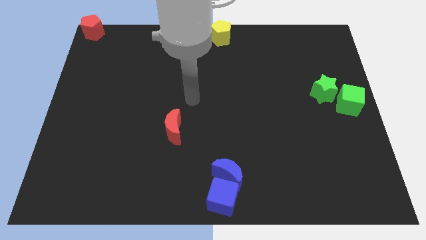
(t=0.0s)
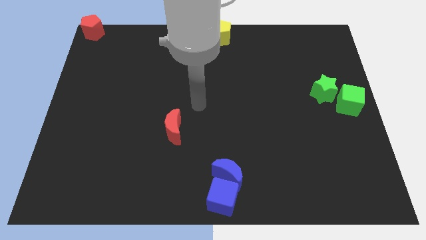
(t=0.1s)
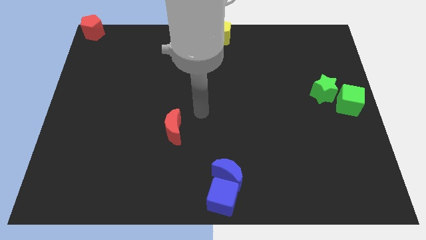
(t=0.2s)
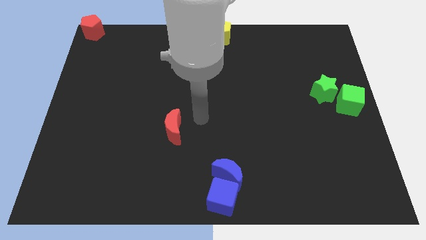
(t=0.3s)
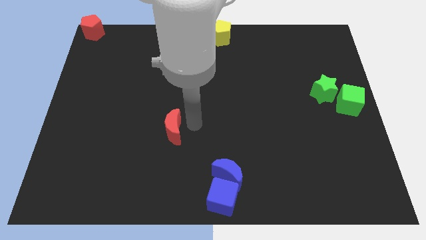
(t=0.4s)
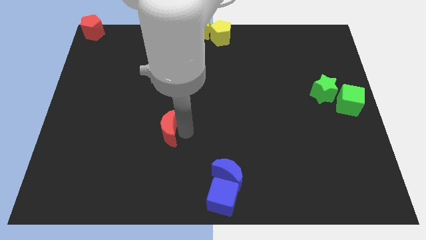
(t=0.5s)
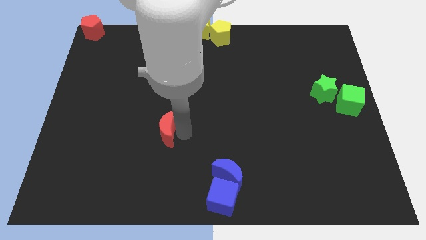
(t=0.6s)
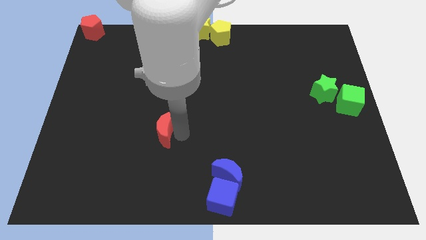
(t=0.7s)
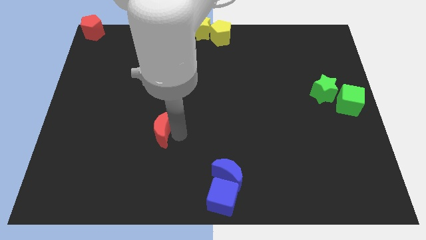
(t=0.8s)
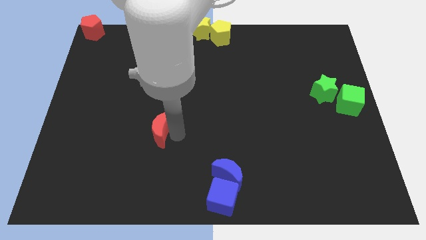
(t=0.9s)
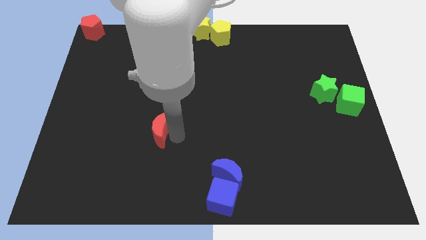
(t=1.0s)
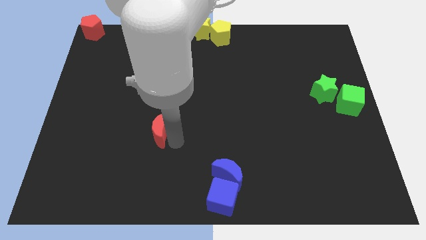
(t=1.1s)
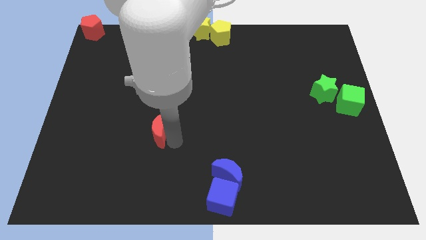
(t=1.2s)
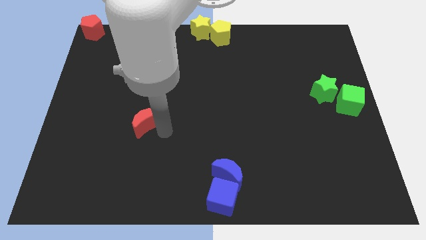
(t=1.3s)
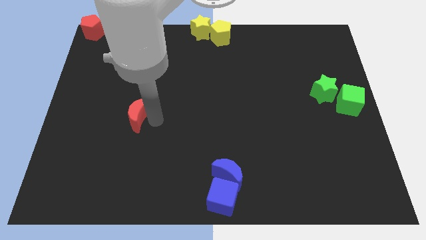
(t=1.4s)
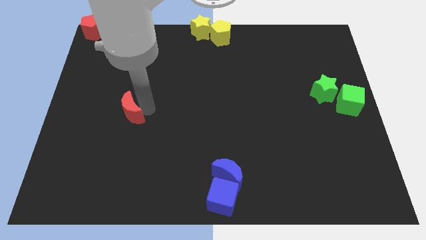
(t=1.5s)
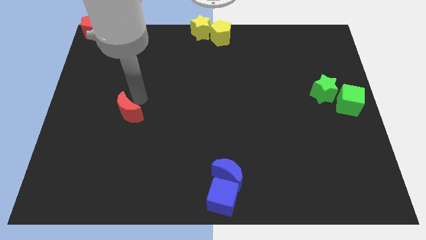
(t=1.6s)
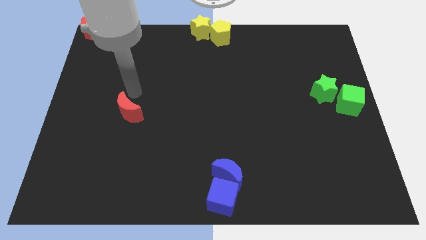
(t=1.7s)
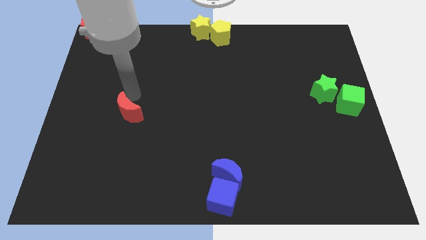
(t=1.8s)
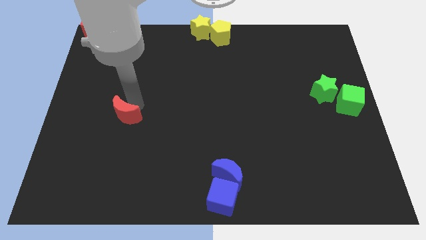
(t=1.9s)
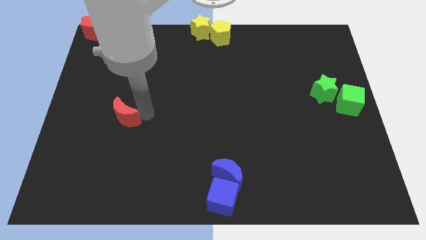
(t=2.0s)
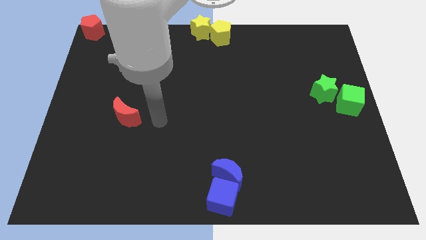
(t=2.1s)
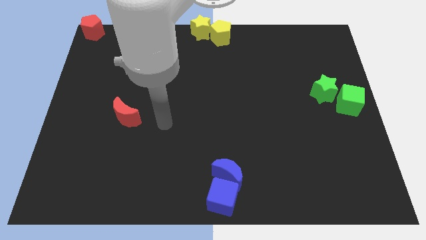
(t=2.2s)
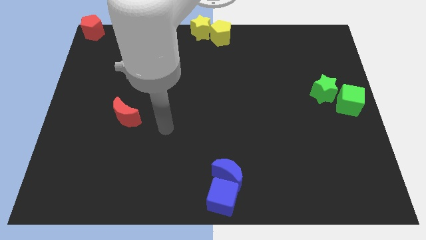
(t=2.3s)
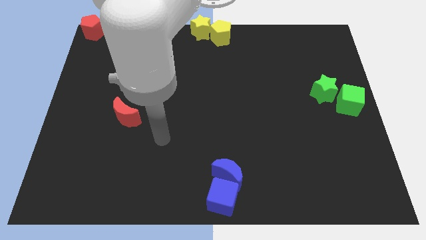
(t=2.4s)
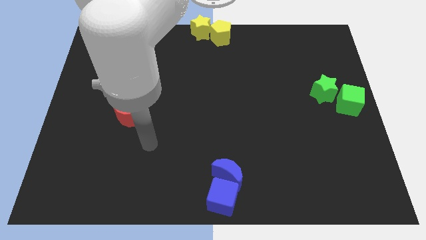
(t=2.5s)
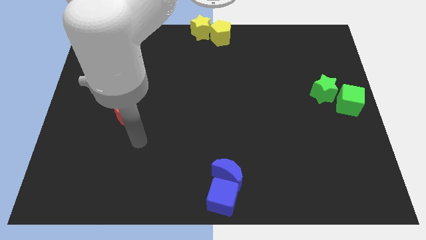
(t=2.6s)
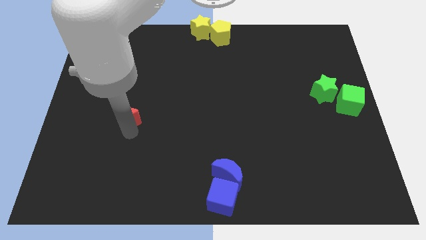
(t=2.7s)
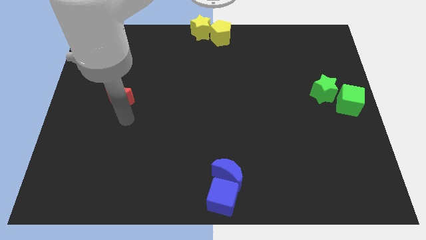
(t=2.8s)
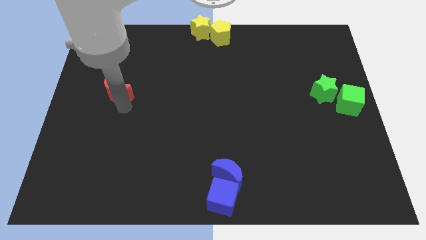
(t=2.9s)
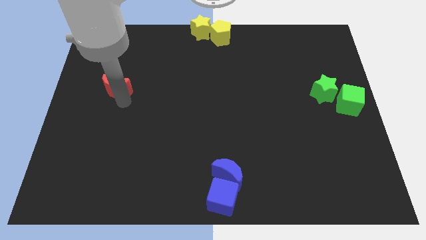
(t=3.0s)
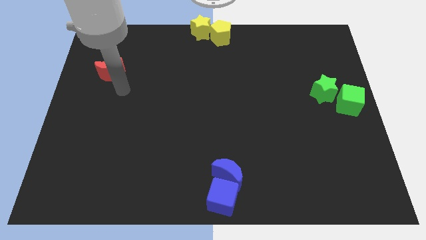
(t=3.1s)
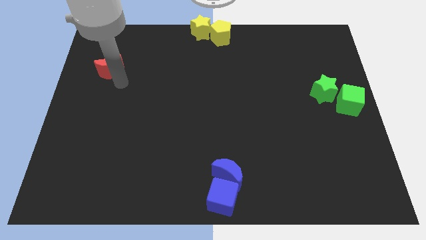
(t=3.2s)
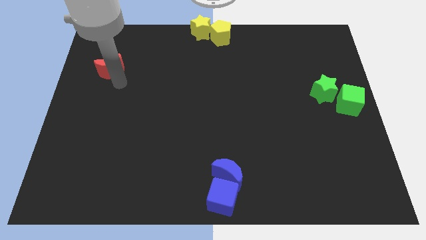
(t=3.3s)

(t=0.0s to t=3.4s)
slide the red moon towards the red pentagon

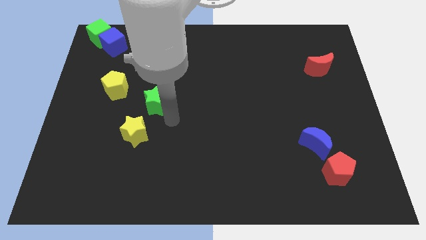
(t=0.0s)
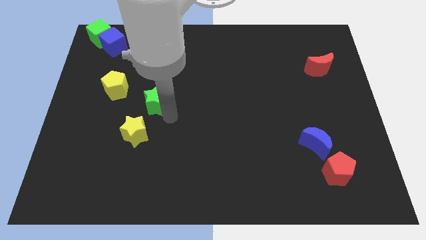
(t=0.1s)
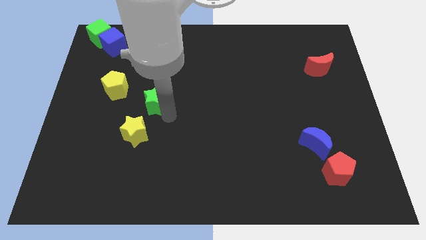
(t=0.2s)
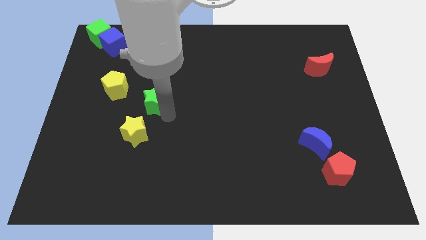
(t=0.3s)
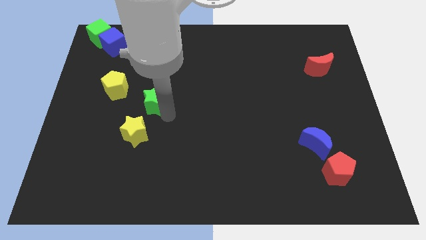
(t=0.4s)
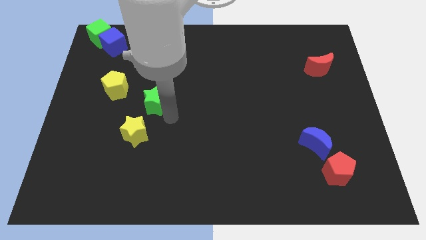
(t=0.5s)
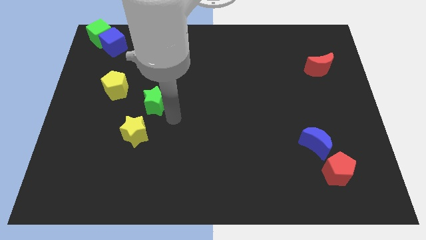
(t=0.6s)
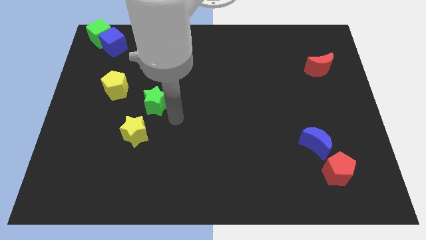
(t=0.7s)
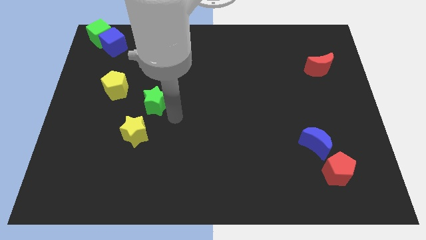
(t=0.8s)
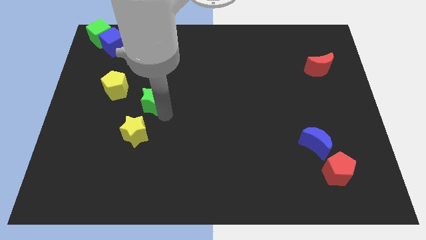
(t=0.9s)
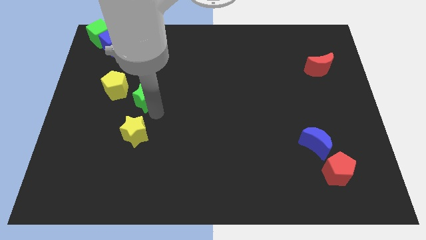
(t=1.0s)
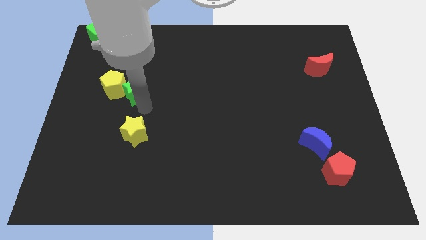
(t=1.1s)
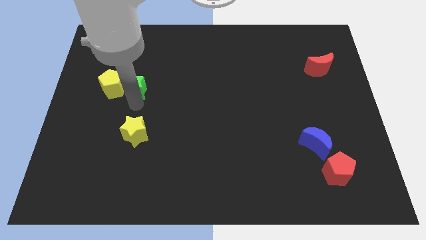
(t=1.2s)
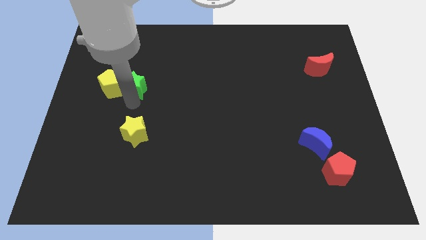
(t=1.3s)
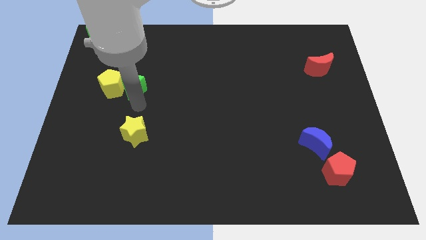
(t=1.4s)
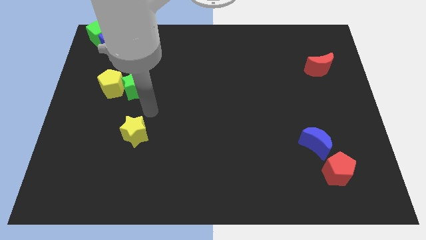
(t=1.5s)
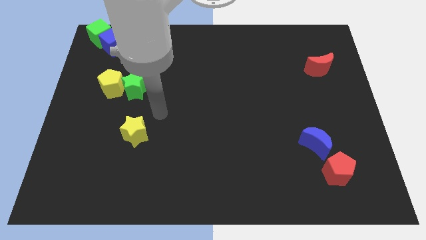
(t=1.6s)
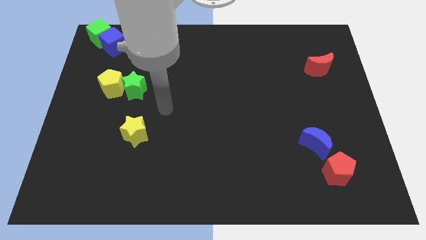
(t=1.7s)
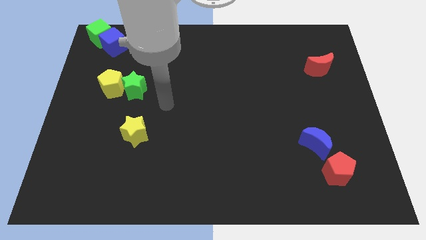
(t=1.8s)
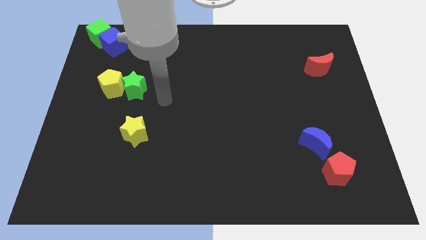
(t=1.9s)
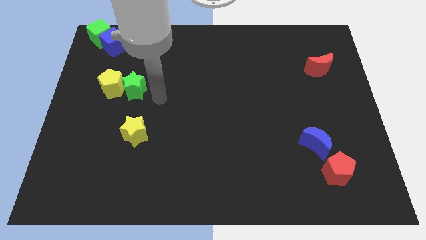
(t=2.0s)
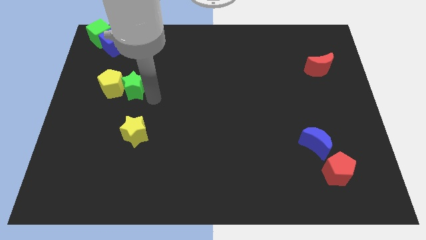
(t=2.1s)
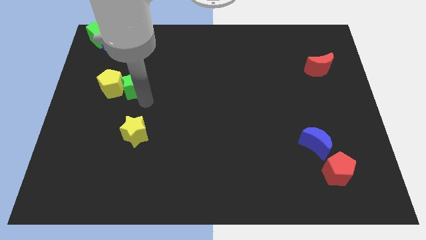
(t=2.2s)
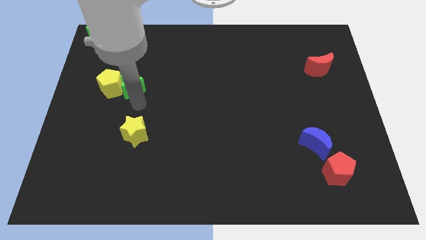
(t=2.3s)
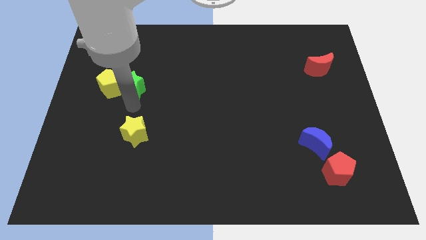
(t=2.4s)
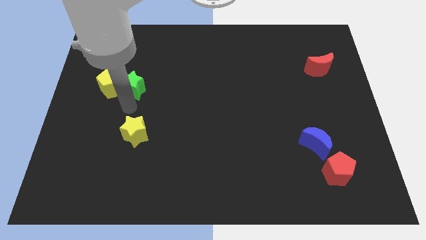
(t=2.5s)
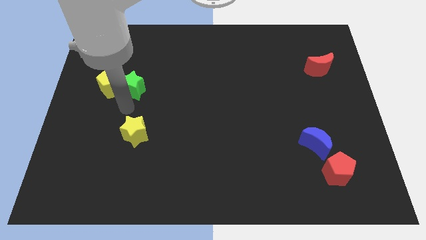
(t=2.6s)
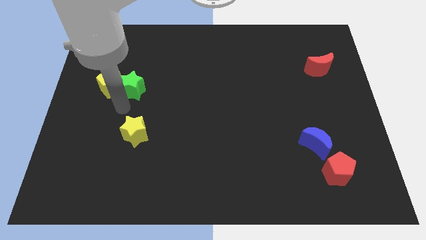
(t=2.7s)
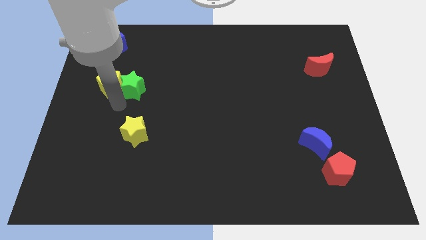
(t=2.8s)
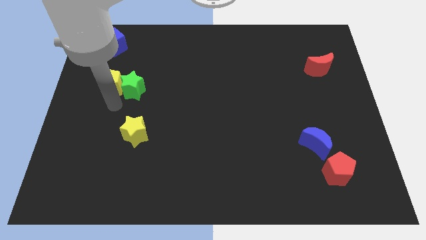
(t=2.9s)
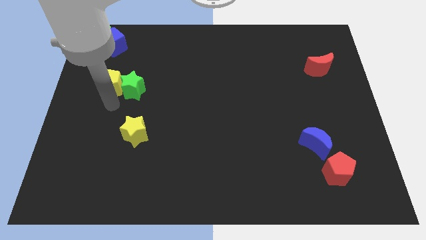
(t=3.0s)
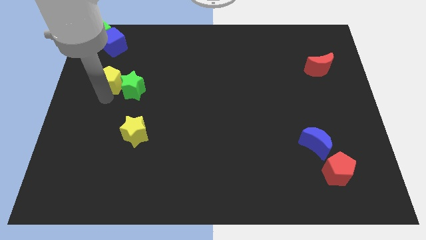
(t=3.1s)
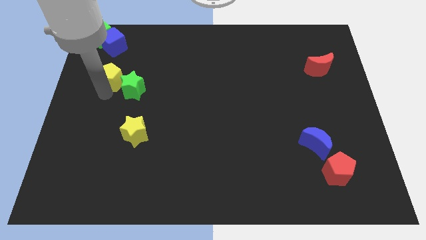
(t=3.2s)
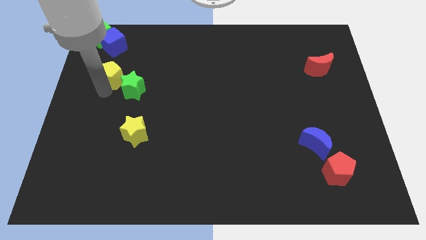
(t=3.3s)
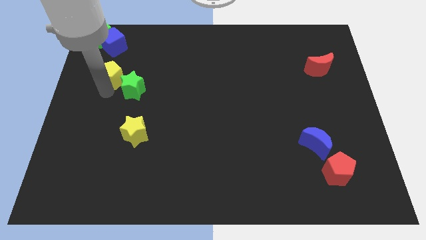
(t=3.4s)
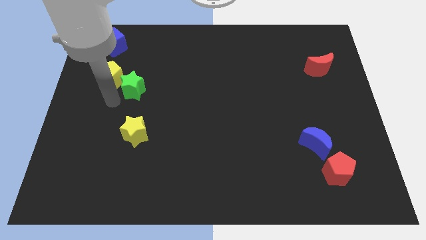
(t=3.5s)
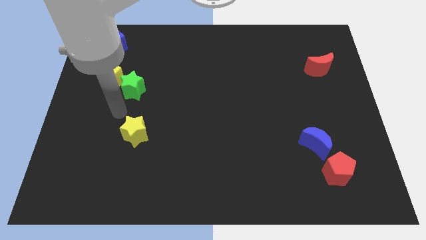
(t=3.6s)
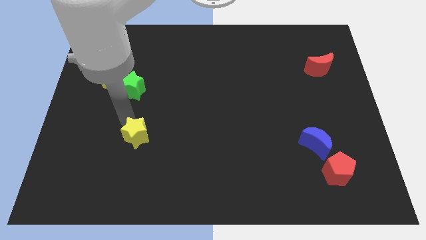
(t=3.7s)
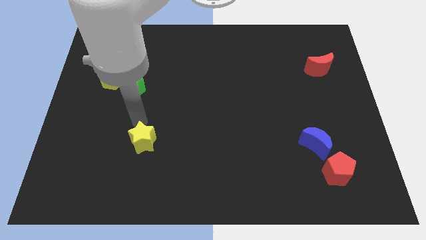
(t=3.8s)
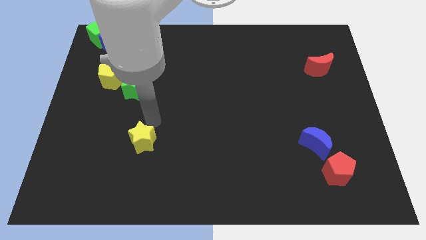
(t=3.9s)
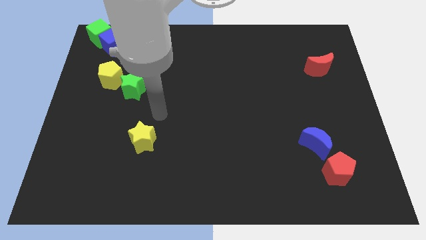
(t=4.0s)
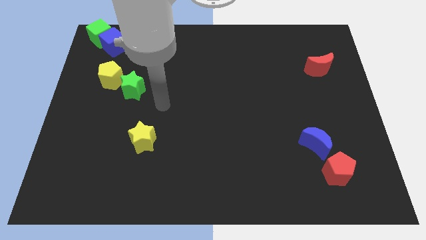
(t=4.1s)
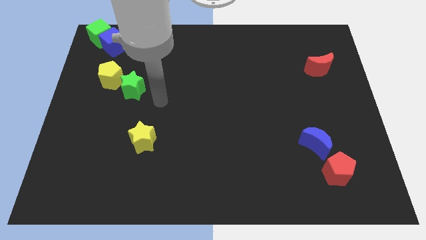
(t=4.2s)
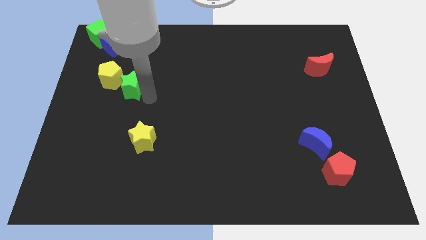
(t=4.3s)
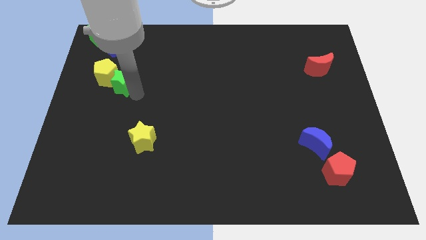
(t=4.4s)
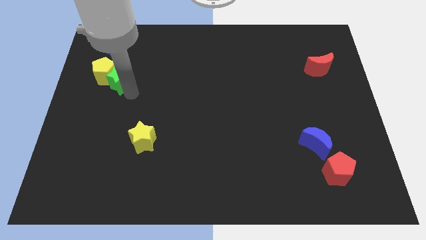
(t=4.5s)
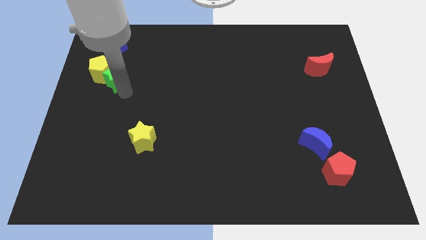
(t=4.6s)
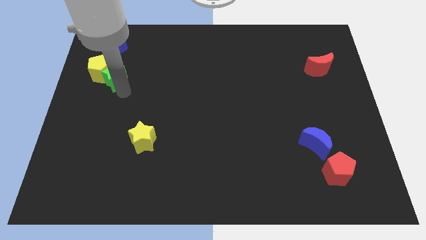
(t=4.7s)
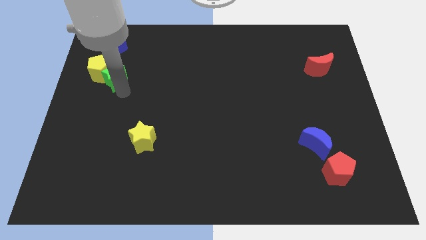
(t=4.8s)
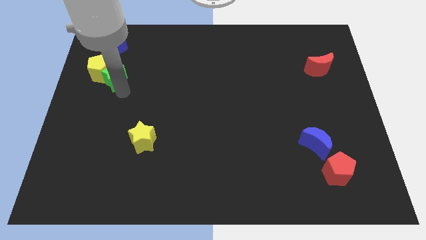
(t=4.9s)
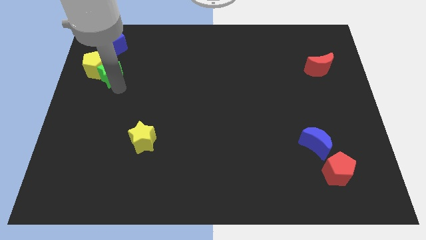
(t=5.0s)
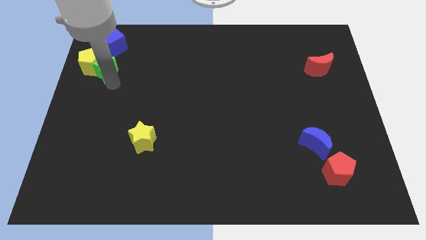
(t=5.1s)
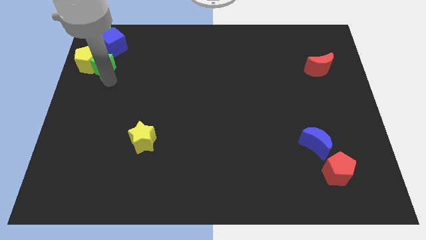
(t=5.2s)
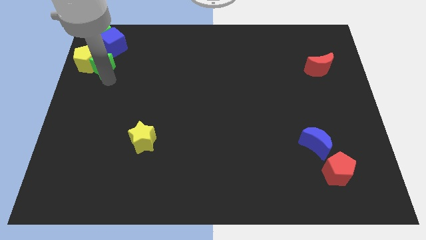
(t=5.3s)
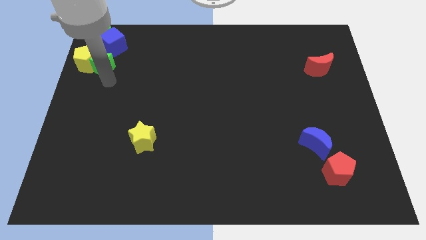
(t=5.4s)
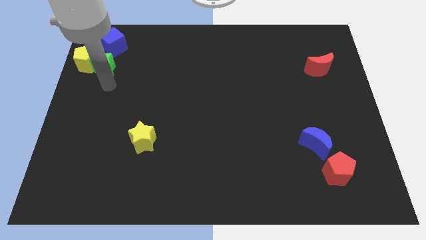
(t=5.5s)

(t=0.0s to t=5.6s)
push the green star and yellow pentagon to the top left
